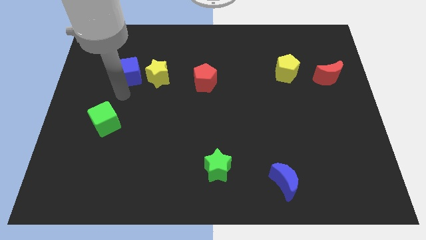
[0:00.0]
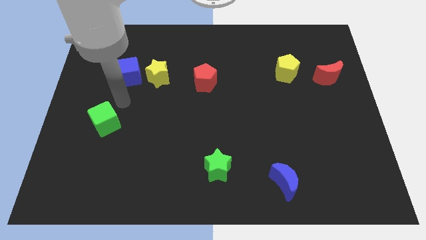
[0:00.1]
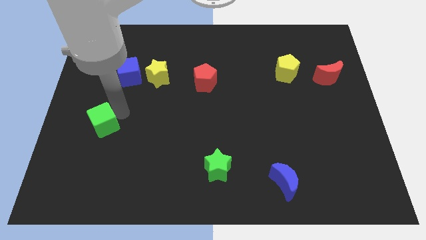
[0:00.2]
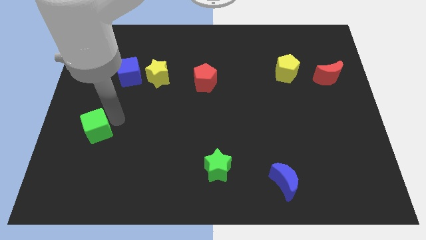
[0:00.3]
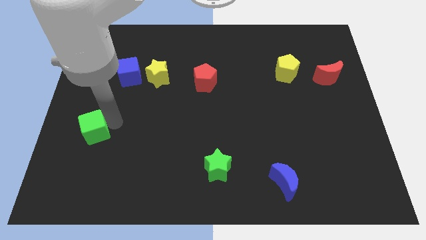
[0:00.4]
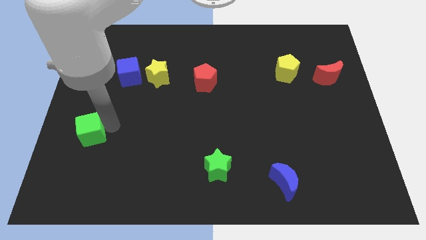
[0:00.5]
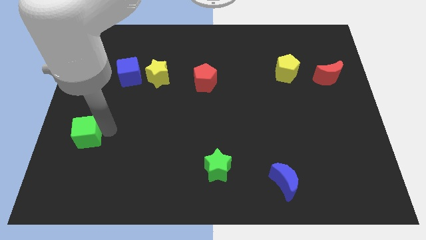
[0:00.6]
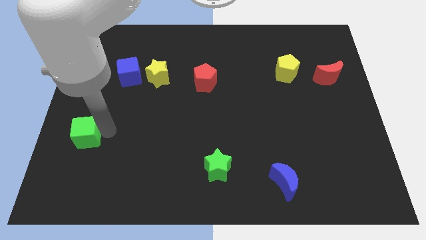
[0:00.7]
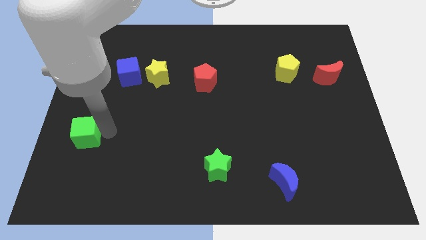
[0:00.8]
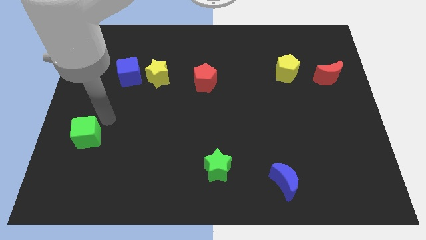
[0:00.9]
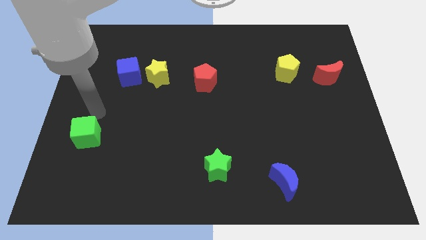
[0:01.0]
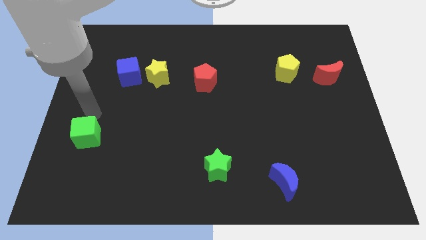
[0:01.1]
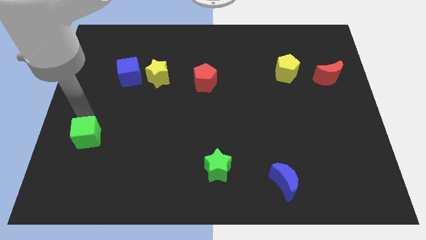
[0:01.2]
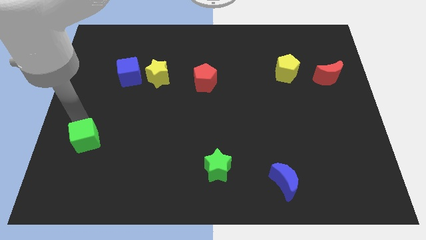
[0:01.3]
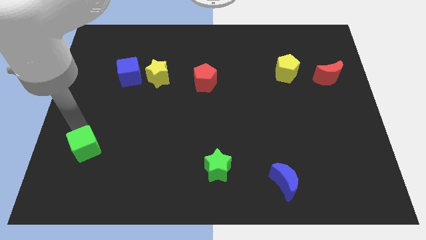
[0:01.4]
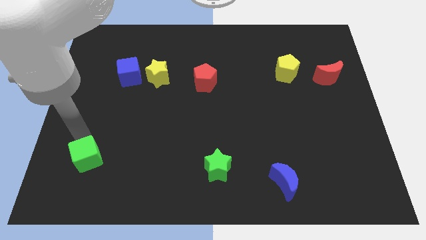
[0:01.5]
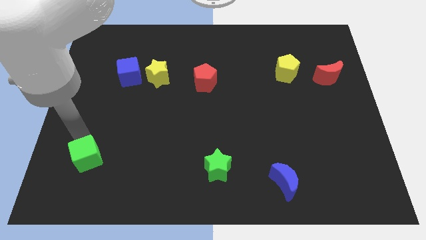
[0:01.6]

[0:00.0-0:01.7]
push the green cube towards the bottom side of the board

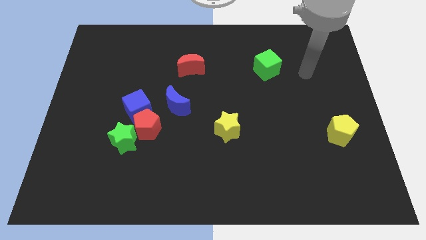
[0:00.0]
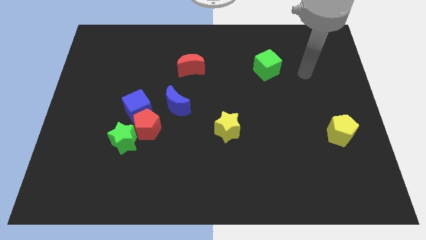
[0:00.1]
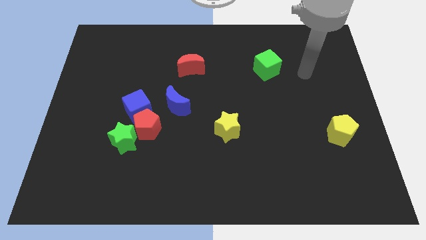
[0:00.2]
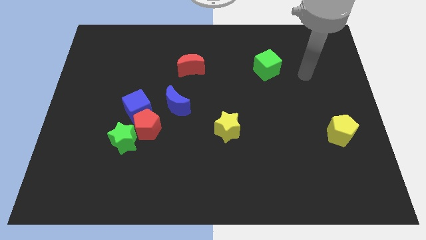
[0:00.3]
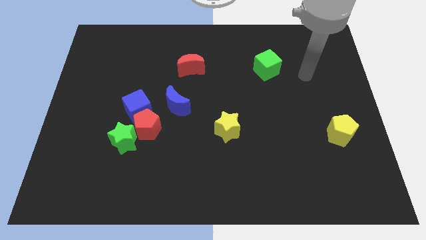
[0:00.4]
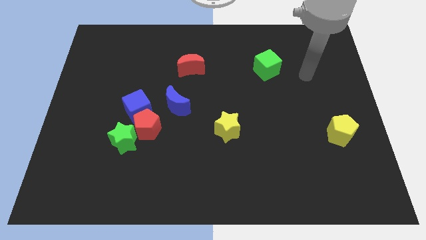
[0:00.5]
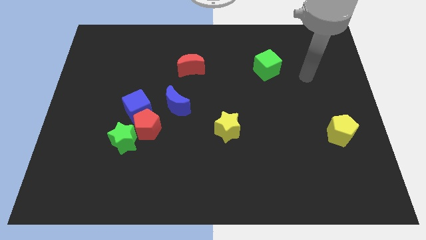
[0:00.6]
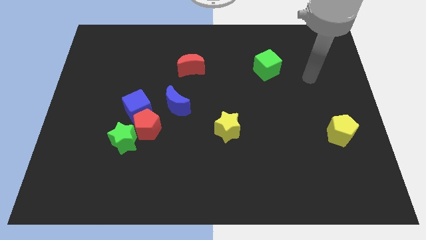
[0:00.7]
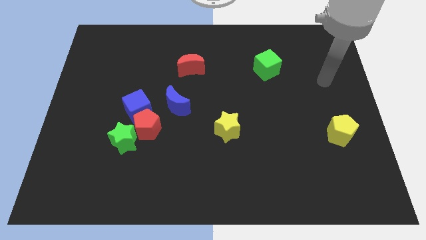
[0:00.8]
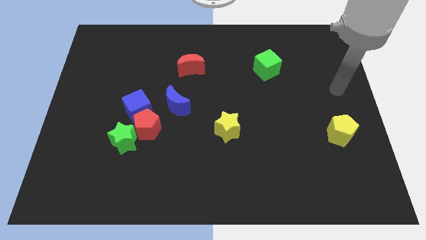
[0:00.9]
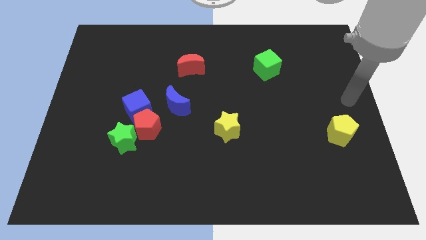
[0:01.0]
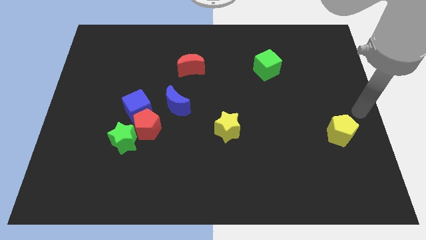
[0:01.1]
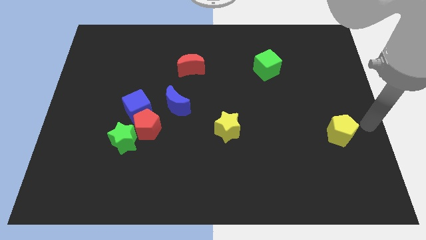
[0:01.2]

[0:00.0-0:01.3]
move your arm to the right side of the yellow pentagon

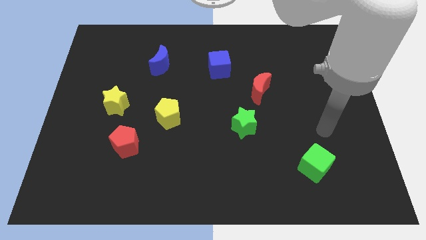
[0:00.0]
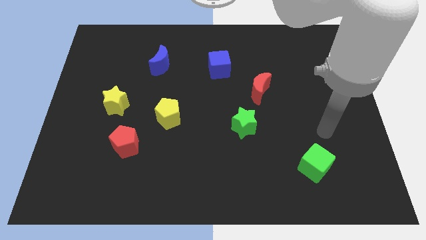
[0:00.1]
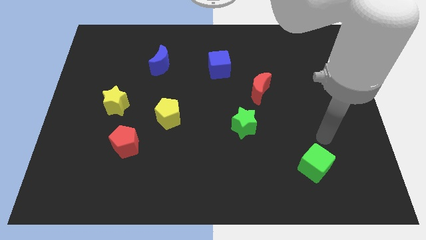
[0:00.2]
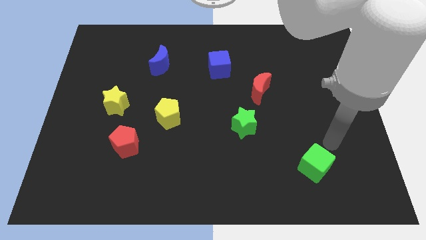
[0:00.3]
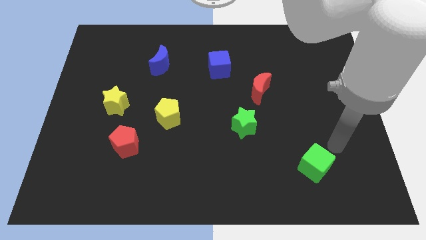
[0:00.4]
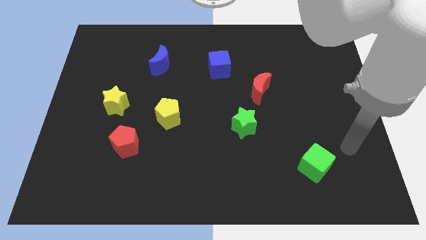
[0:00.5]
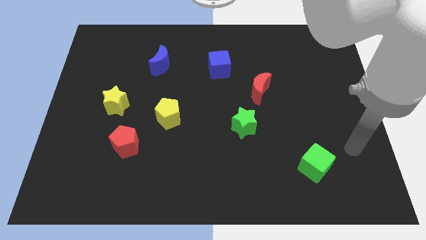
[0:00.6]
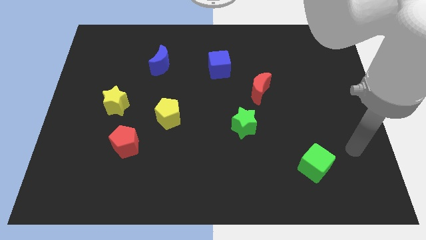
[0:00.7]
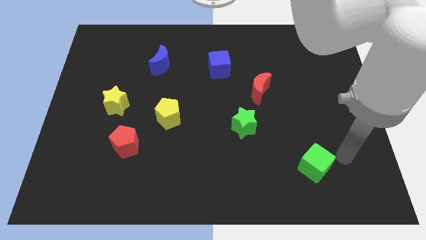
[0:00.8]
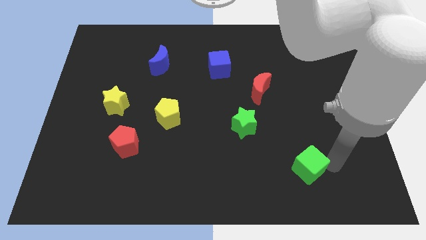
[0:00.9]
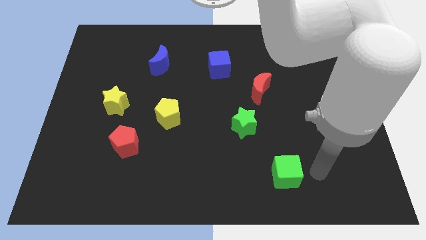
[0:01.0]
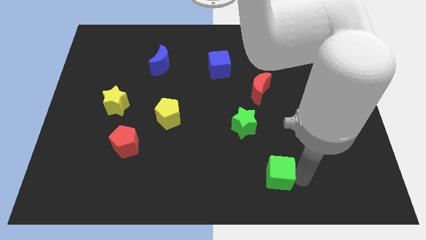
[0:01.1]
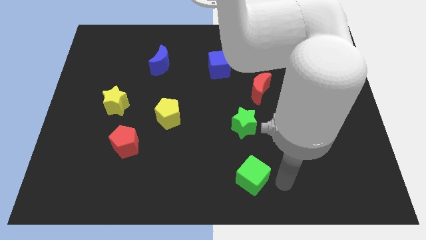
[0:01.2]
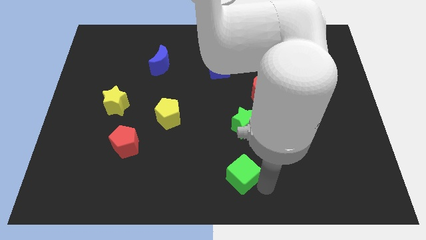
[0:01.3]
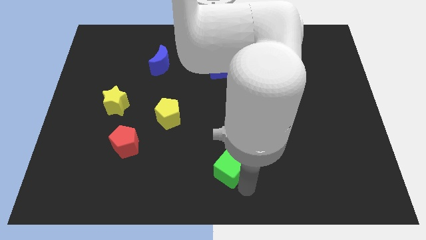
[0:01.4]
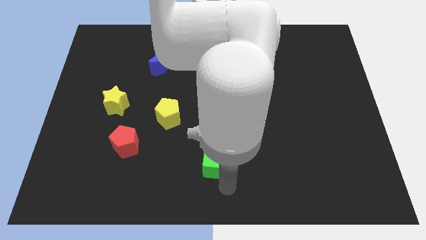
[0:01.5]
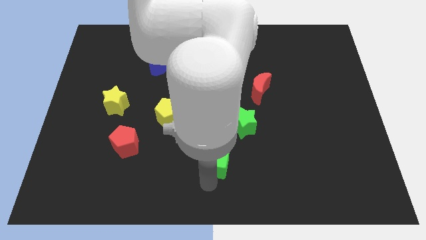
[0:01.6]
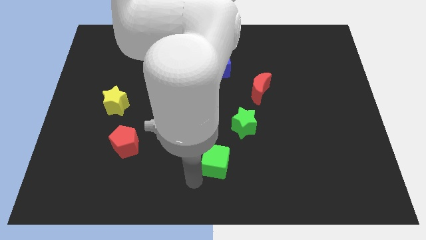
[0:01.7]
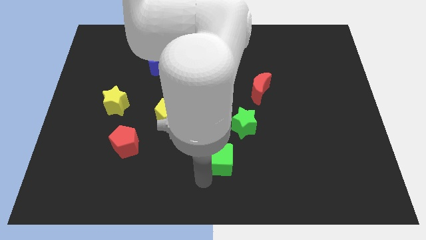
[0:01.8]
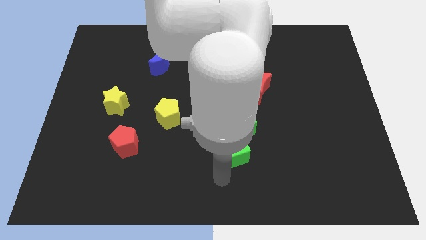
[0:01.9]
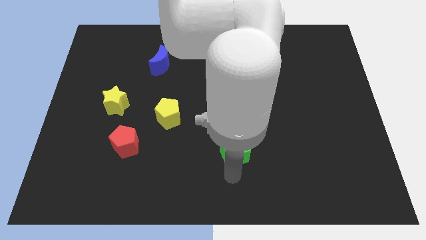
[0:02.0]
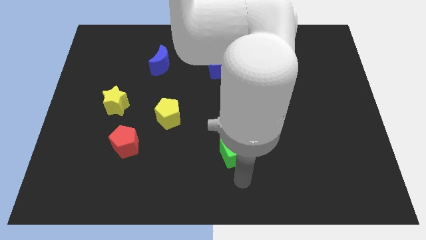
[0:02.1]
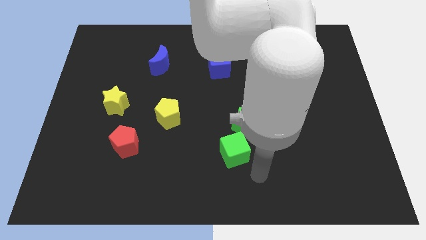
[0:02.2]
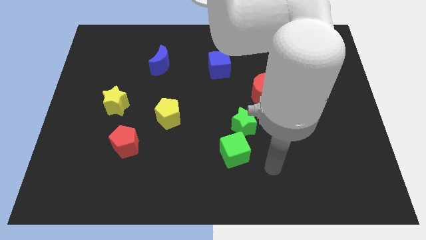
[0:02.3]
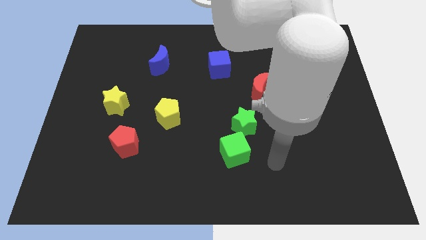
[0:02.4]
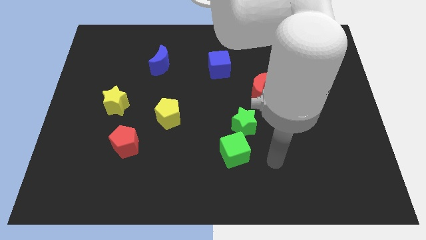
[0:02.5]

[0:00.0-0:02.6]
move the green cube below the green star diagonally

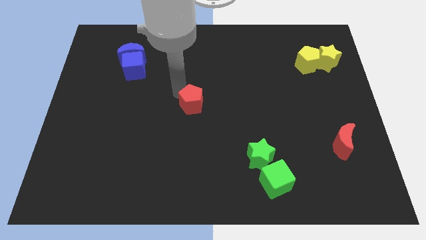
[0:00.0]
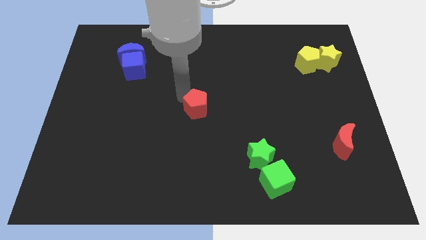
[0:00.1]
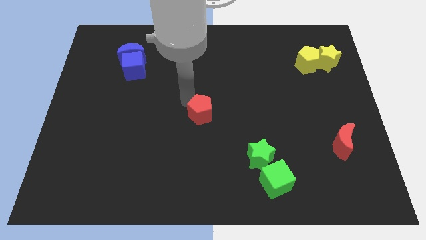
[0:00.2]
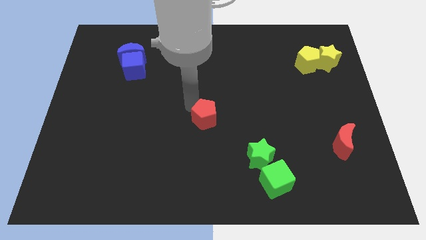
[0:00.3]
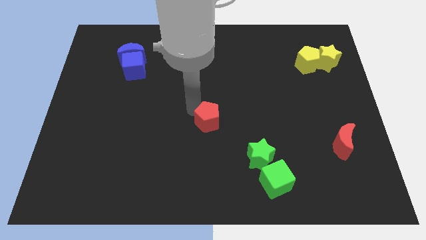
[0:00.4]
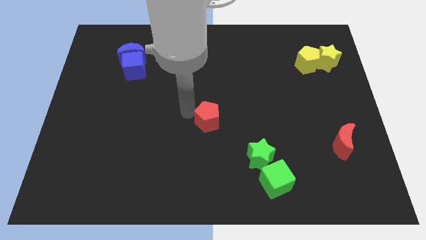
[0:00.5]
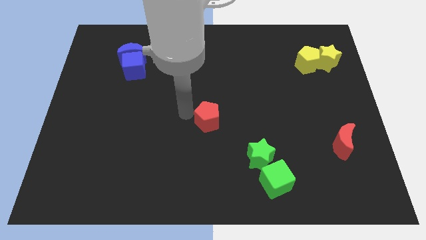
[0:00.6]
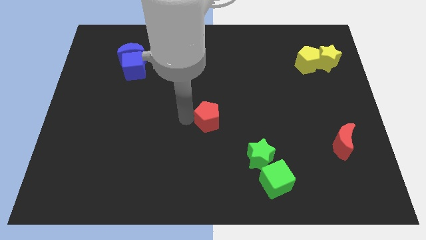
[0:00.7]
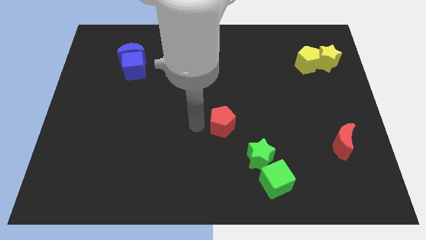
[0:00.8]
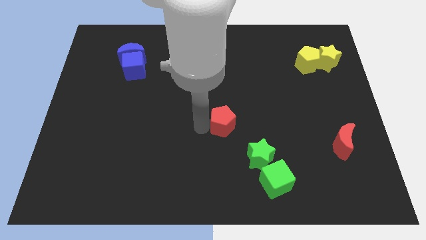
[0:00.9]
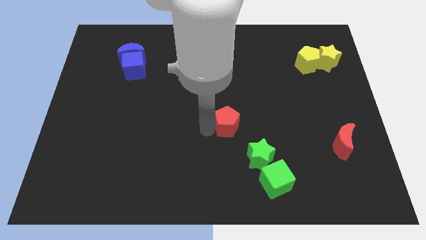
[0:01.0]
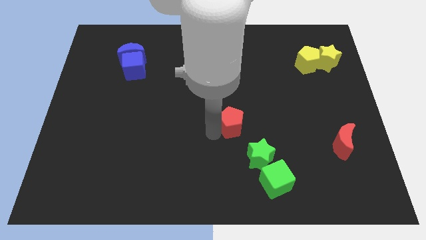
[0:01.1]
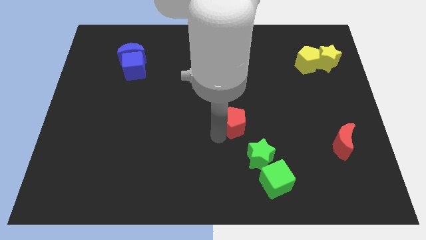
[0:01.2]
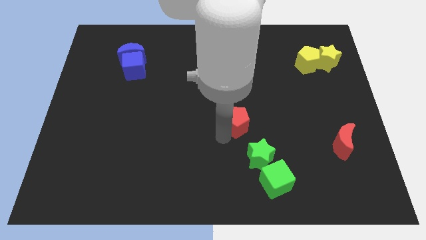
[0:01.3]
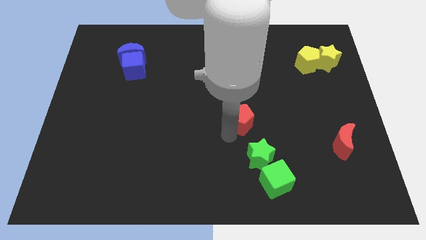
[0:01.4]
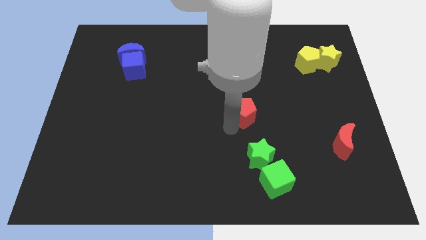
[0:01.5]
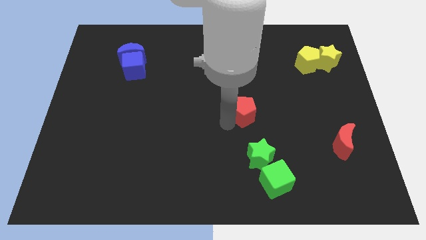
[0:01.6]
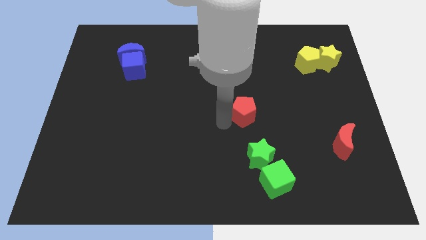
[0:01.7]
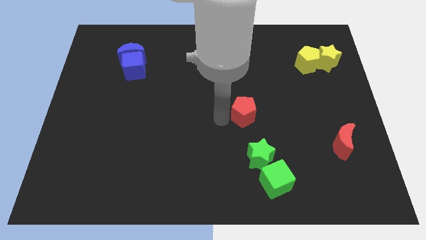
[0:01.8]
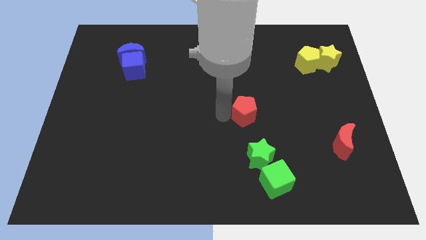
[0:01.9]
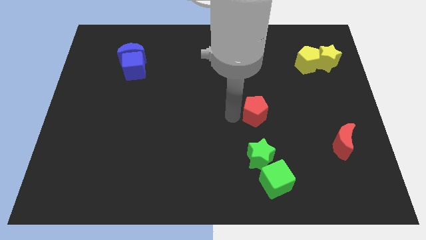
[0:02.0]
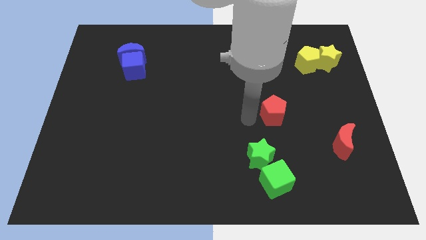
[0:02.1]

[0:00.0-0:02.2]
place the red pentagon above the green star

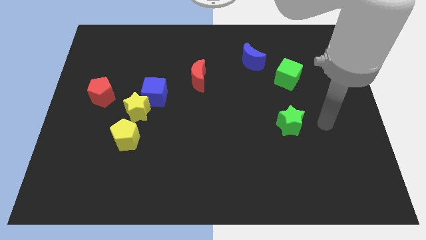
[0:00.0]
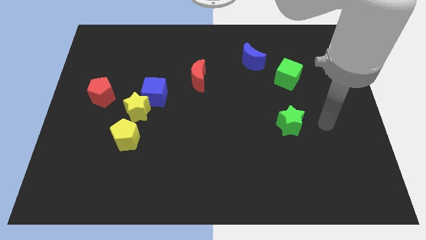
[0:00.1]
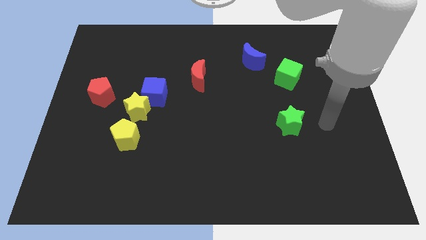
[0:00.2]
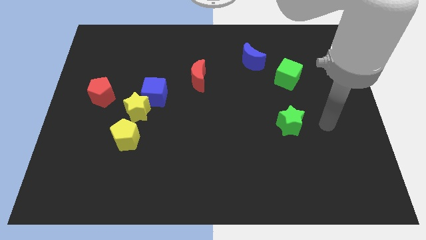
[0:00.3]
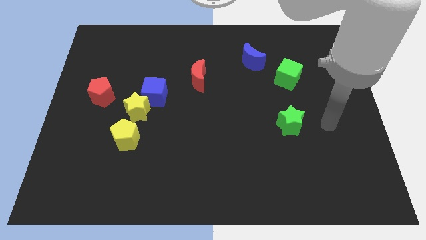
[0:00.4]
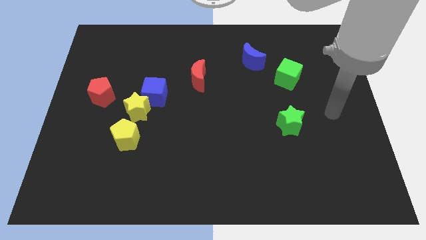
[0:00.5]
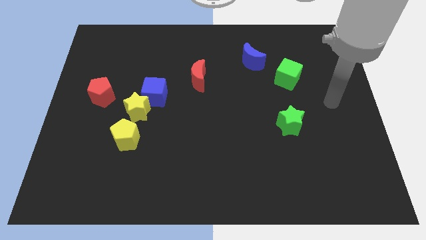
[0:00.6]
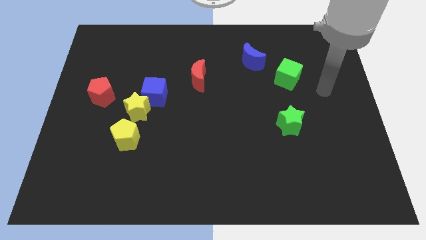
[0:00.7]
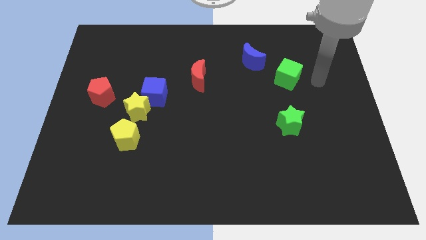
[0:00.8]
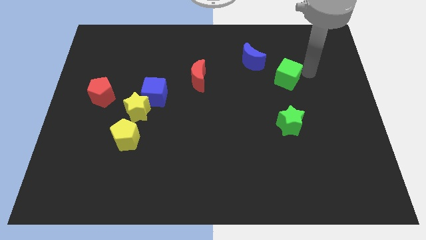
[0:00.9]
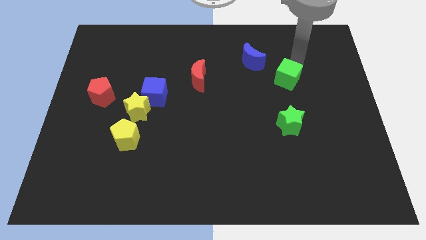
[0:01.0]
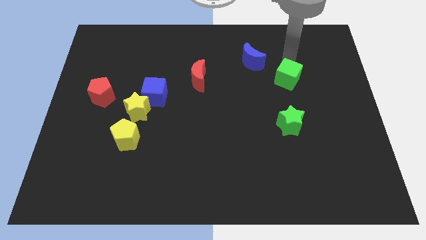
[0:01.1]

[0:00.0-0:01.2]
place your hand above the green cube
